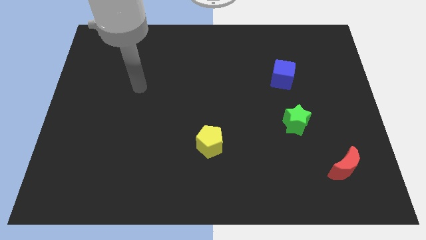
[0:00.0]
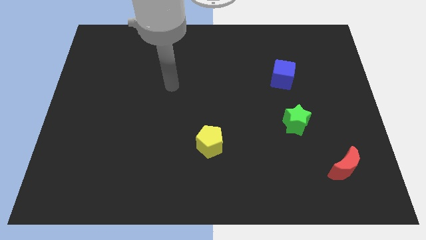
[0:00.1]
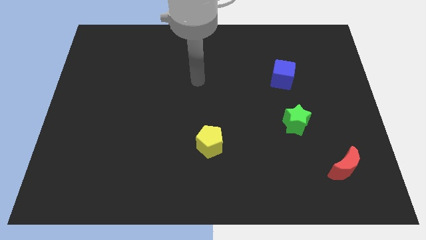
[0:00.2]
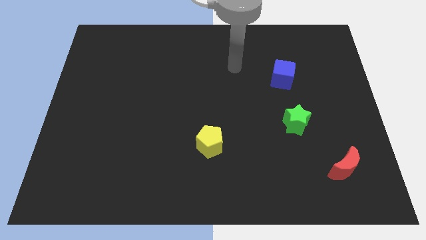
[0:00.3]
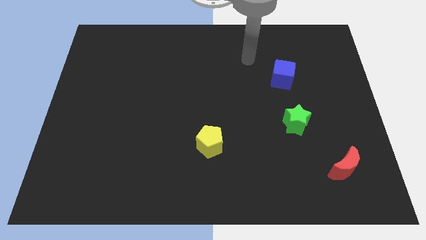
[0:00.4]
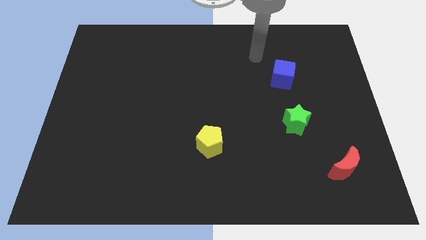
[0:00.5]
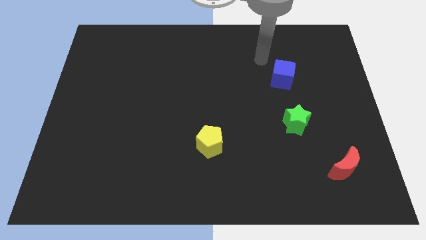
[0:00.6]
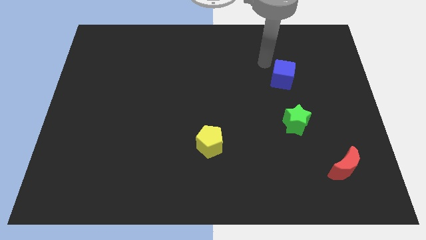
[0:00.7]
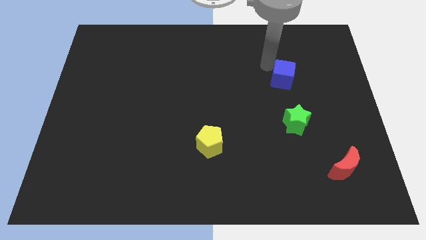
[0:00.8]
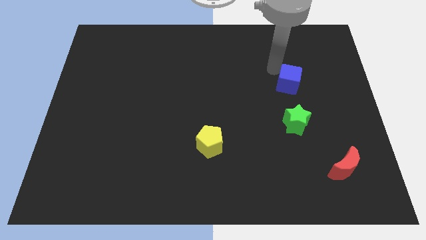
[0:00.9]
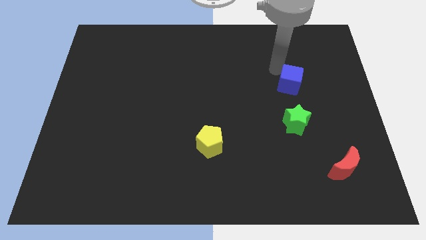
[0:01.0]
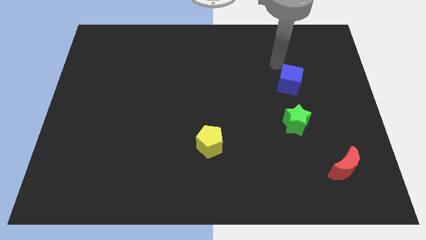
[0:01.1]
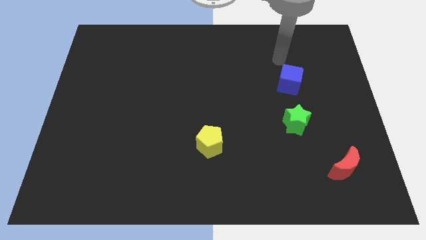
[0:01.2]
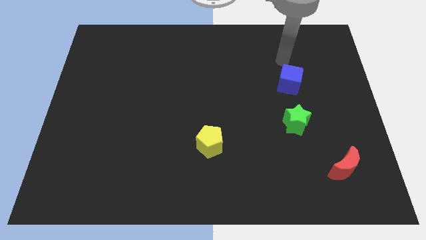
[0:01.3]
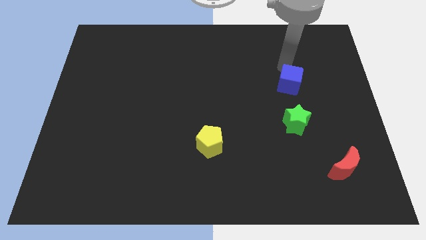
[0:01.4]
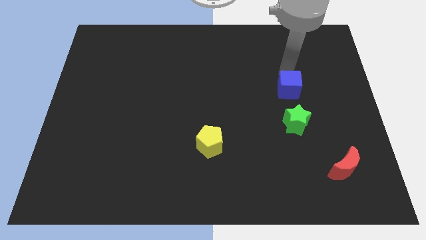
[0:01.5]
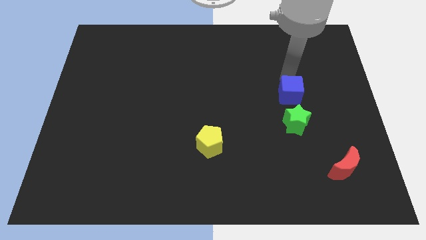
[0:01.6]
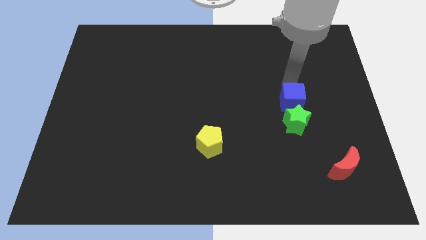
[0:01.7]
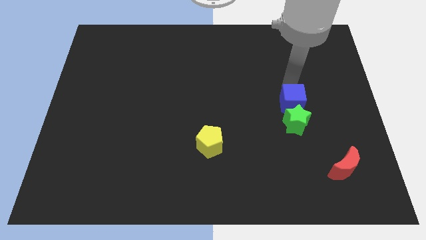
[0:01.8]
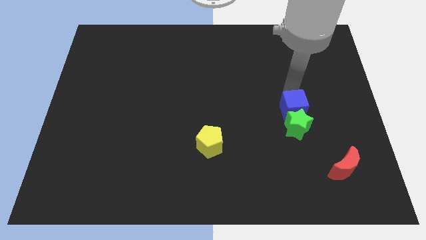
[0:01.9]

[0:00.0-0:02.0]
put the blue block towards the star

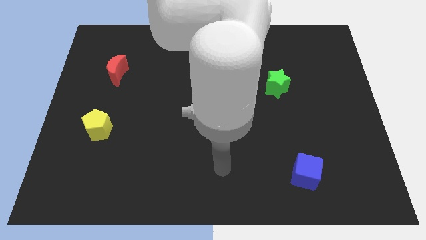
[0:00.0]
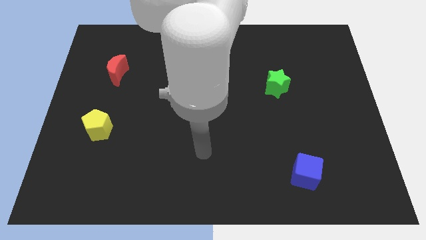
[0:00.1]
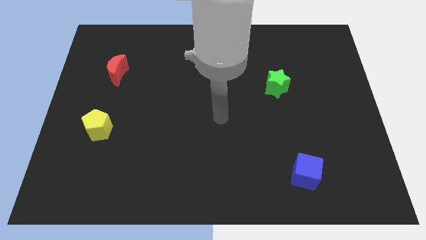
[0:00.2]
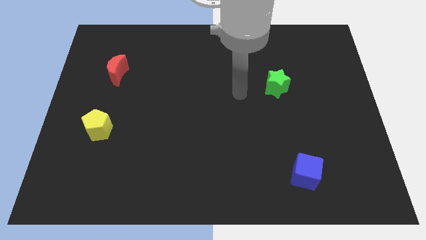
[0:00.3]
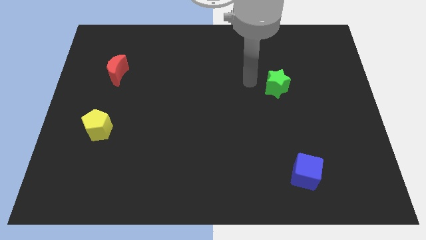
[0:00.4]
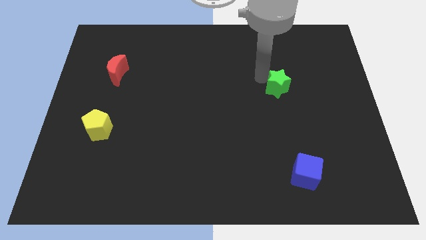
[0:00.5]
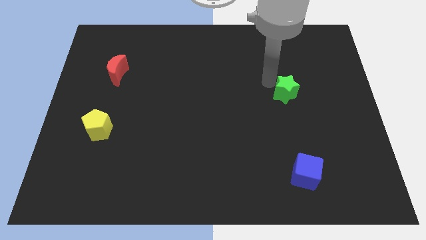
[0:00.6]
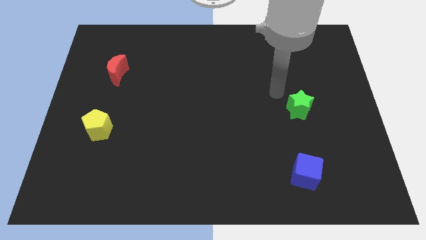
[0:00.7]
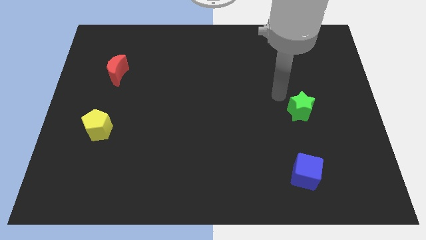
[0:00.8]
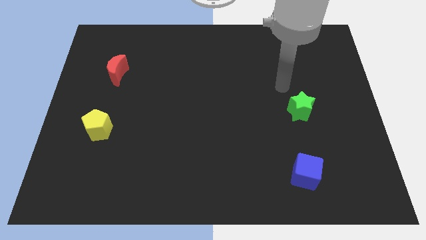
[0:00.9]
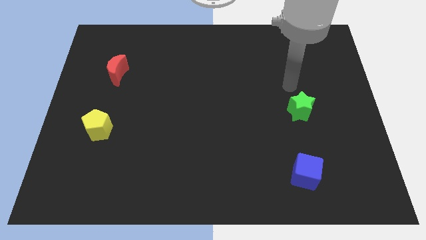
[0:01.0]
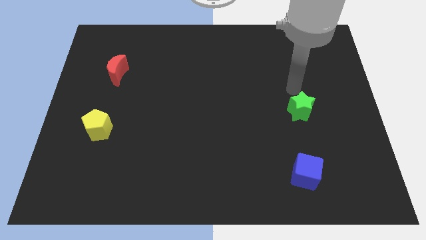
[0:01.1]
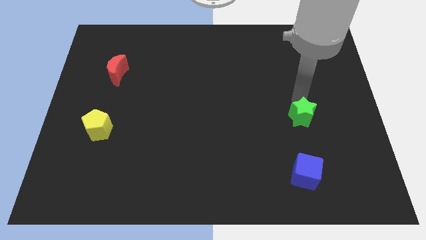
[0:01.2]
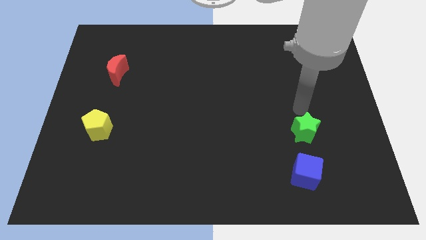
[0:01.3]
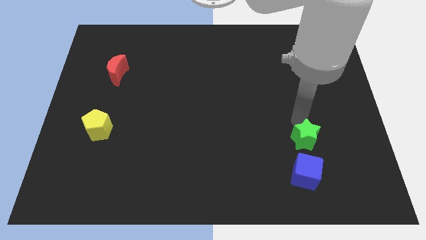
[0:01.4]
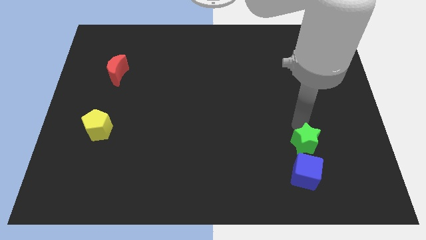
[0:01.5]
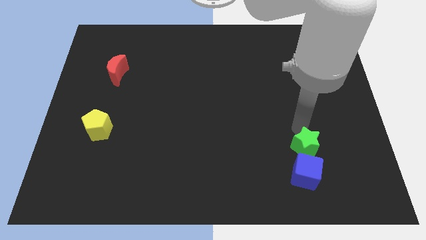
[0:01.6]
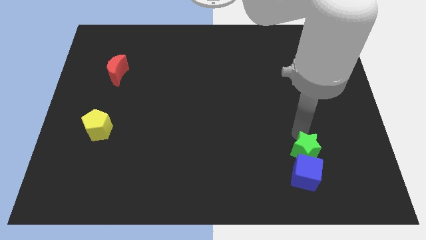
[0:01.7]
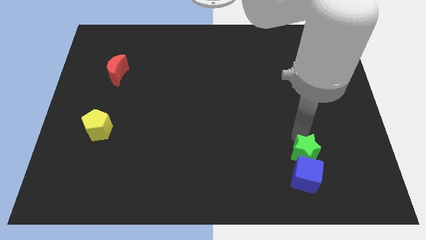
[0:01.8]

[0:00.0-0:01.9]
put the green star towards the blue block

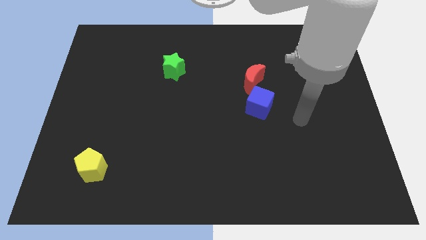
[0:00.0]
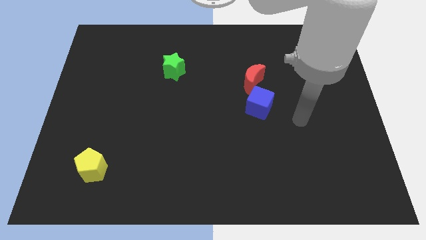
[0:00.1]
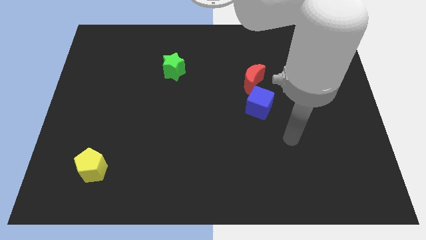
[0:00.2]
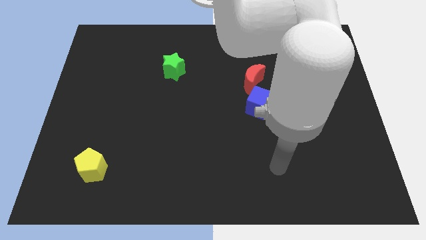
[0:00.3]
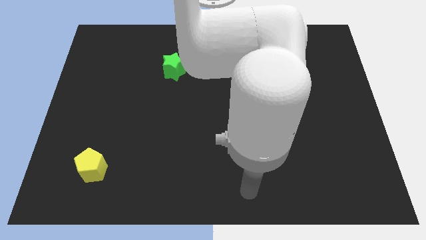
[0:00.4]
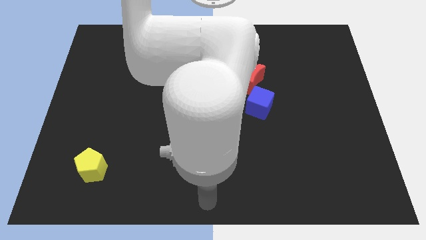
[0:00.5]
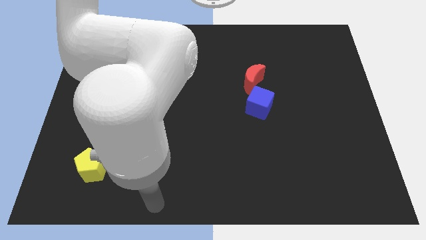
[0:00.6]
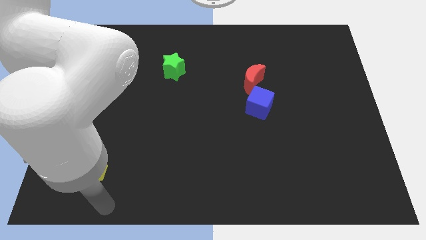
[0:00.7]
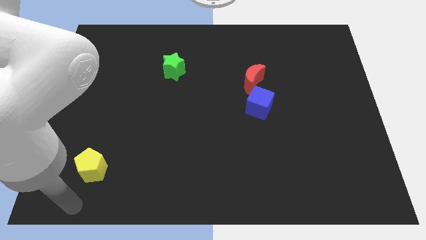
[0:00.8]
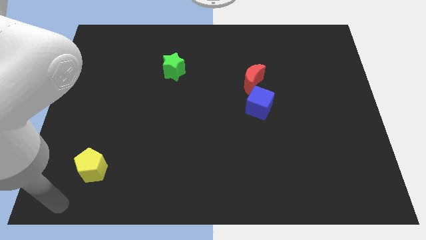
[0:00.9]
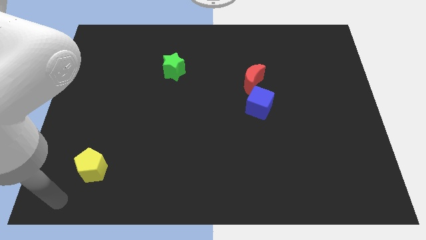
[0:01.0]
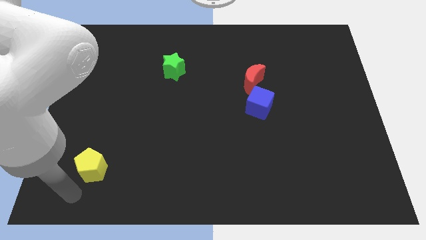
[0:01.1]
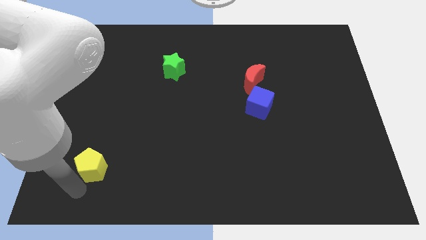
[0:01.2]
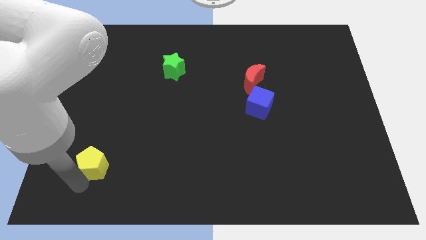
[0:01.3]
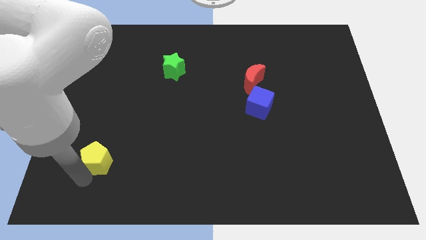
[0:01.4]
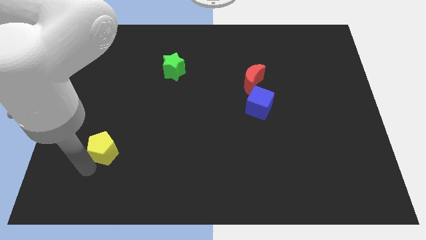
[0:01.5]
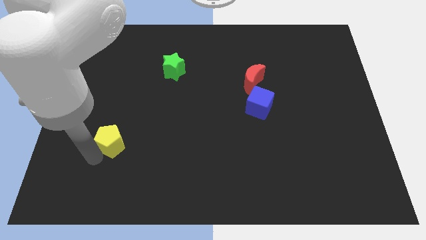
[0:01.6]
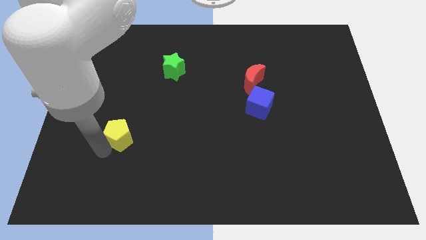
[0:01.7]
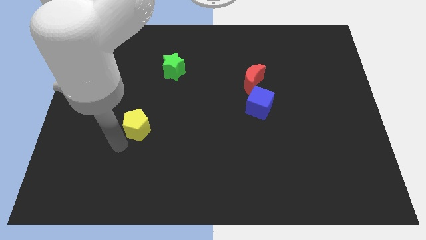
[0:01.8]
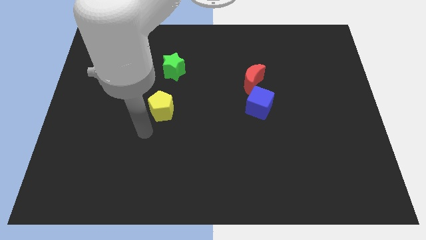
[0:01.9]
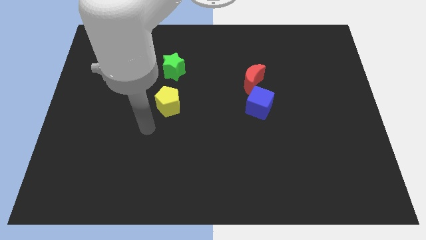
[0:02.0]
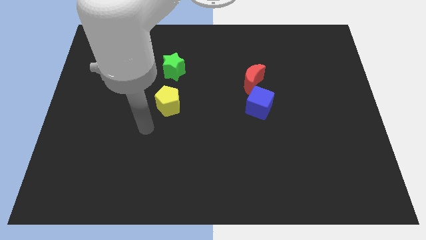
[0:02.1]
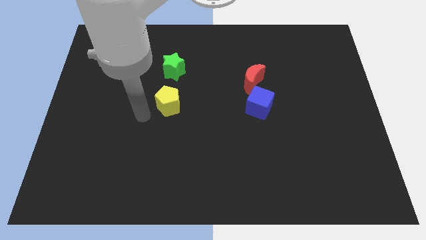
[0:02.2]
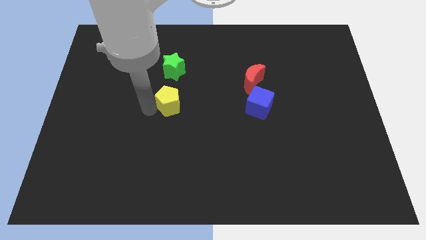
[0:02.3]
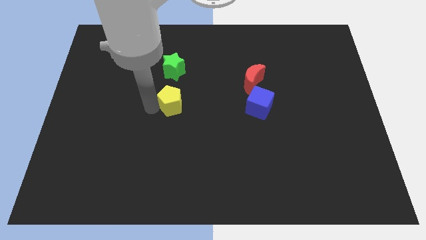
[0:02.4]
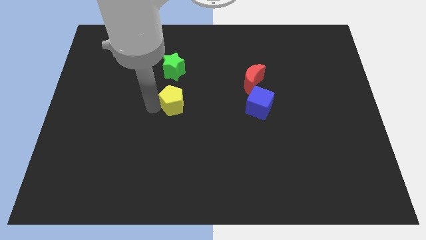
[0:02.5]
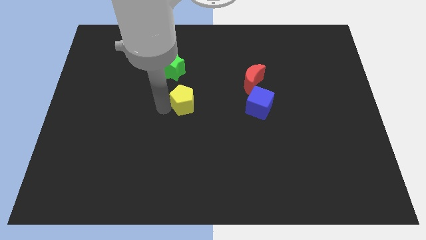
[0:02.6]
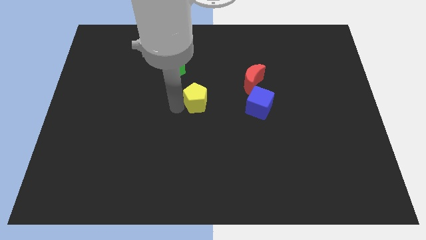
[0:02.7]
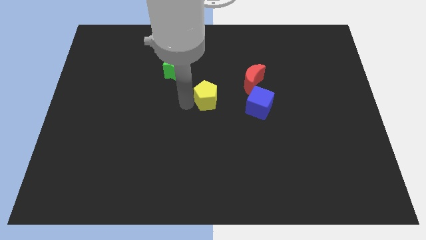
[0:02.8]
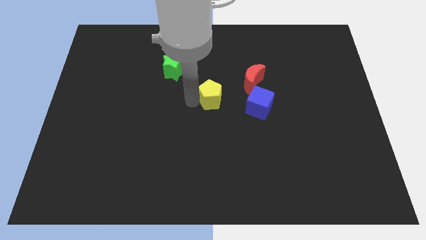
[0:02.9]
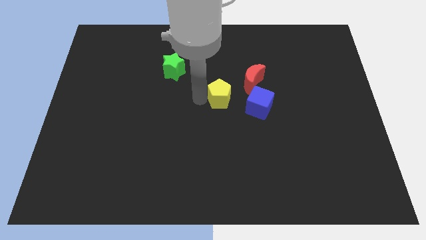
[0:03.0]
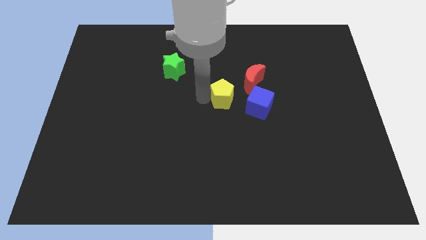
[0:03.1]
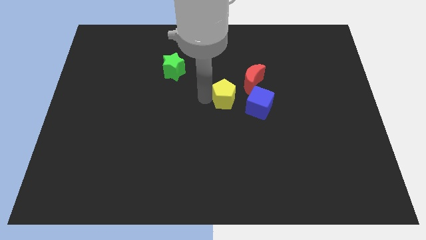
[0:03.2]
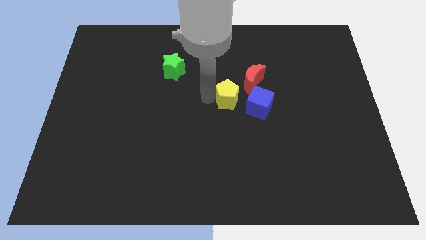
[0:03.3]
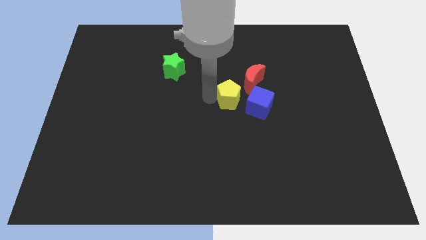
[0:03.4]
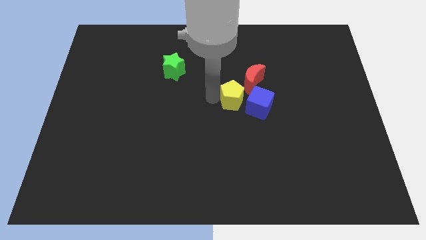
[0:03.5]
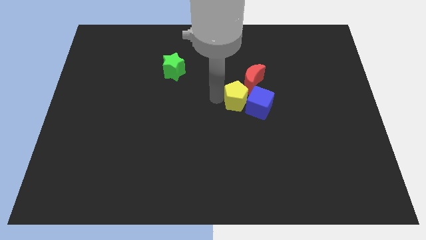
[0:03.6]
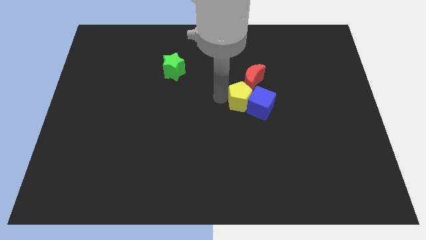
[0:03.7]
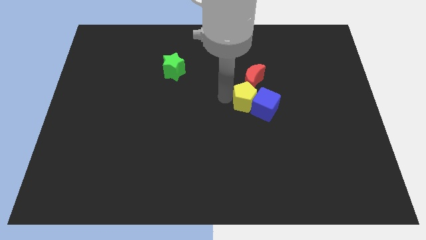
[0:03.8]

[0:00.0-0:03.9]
move the yellow pentagon close to the blue block

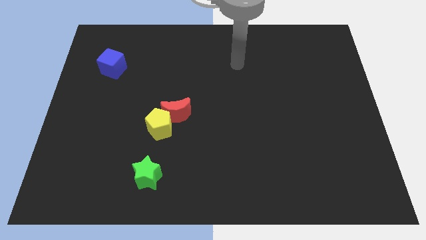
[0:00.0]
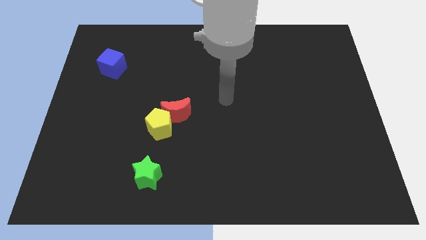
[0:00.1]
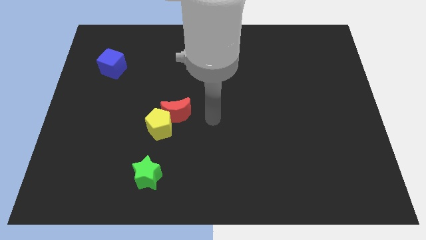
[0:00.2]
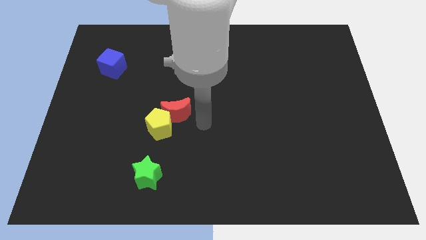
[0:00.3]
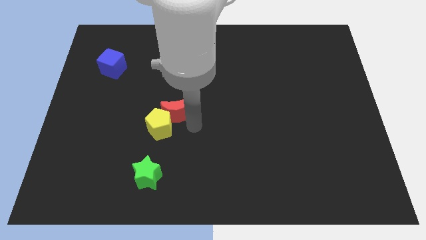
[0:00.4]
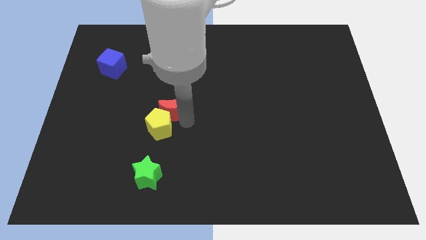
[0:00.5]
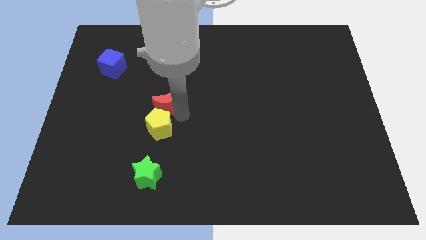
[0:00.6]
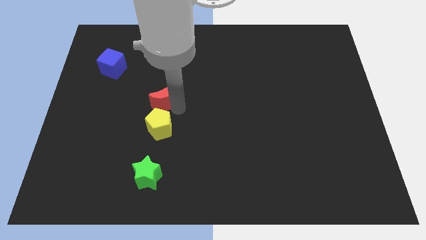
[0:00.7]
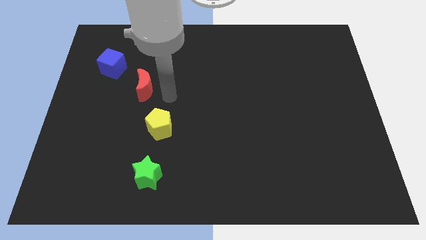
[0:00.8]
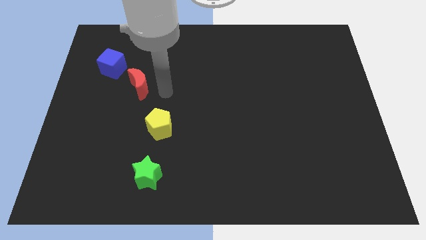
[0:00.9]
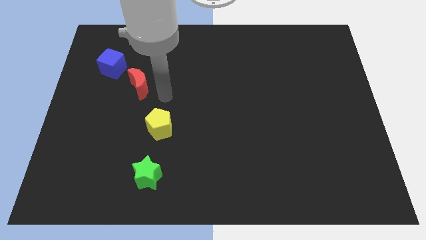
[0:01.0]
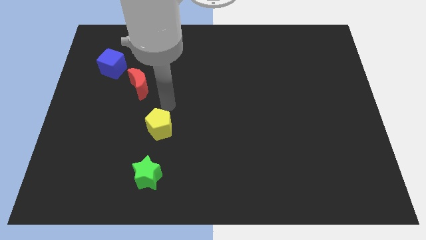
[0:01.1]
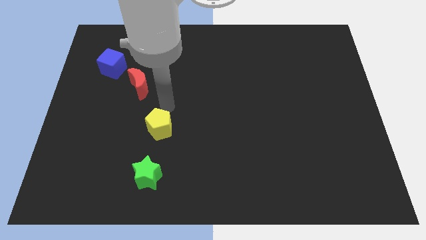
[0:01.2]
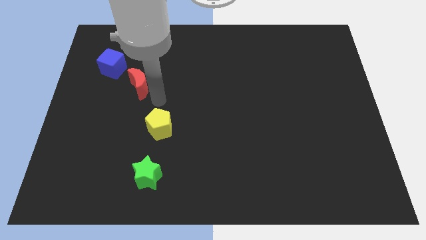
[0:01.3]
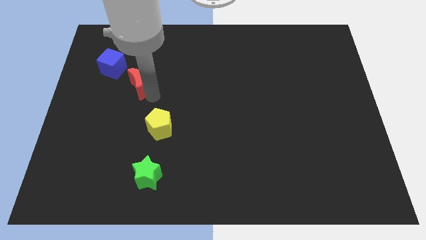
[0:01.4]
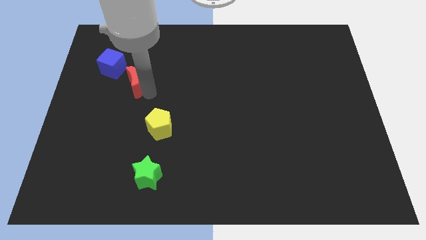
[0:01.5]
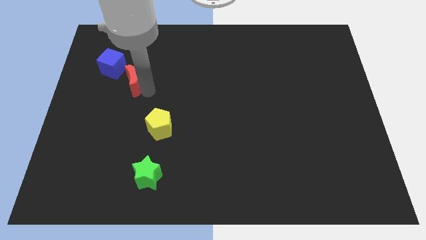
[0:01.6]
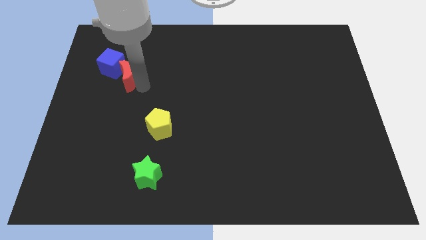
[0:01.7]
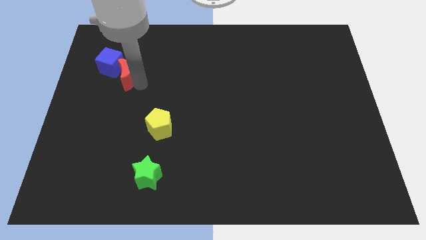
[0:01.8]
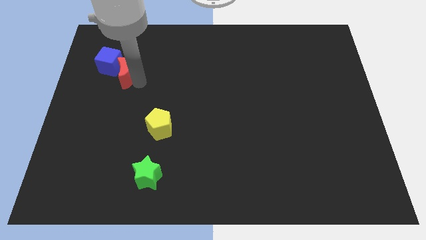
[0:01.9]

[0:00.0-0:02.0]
push the red moon towards the blue block
